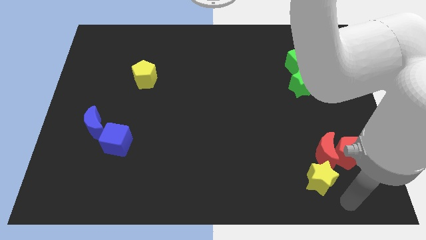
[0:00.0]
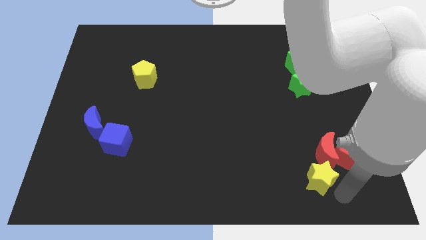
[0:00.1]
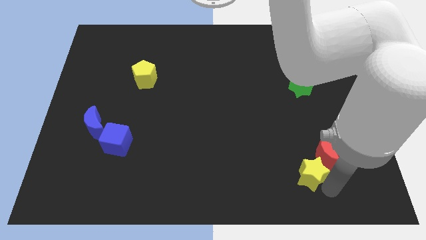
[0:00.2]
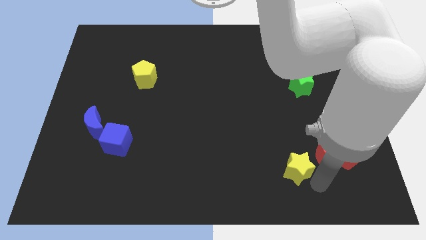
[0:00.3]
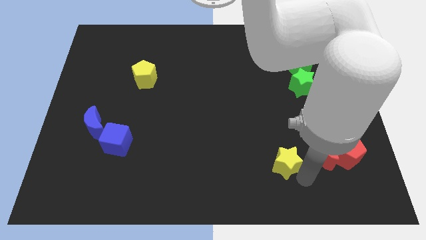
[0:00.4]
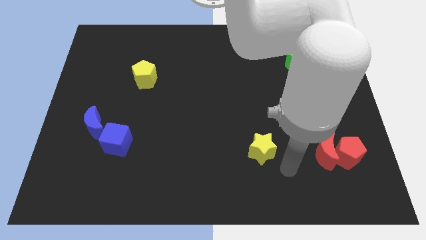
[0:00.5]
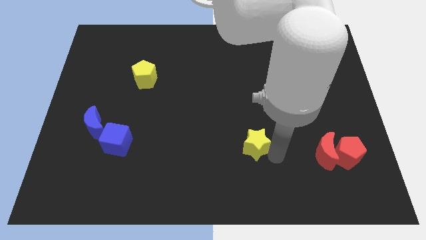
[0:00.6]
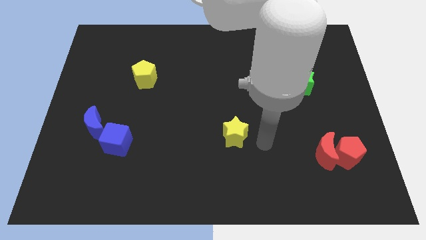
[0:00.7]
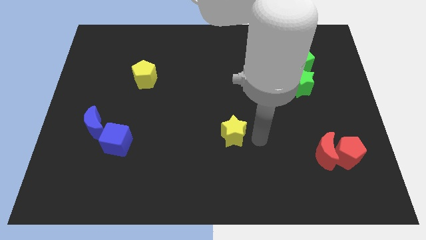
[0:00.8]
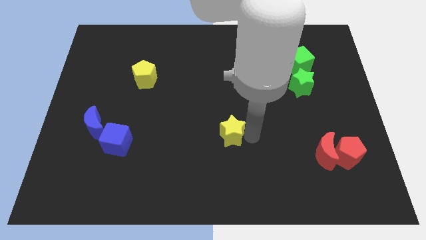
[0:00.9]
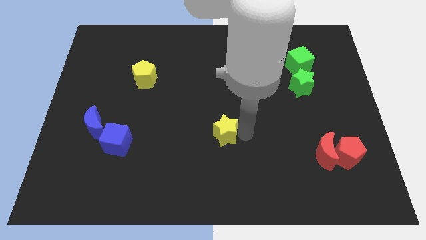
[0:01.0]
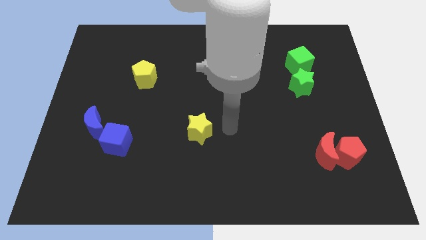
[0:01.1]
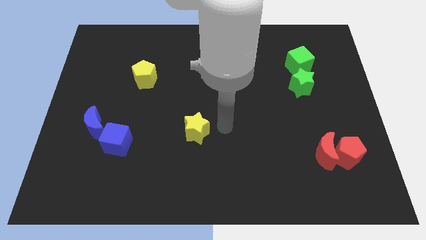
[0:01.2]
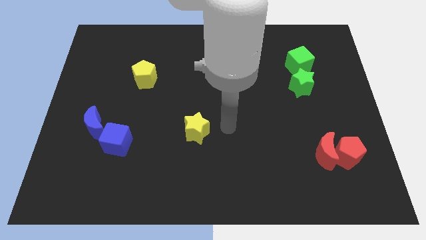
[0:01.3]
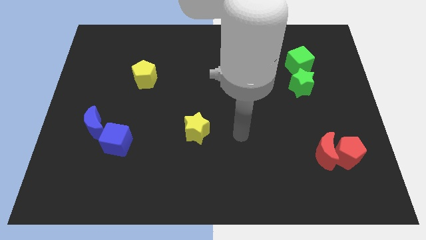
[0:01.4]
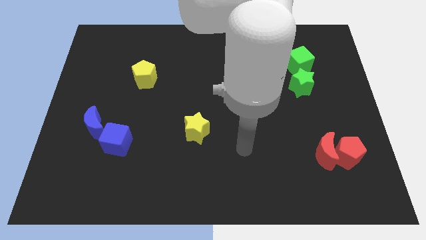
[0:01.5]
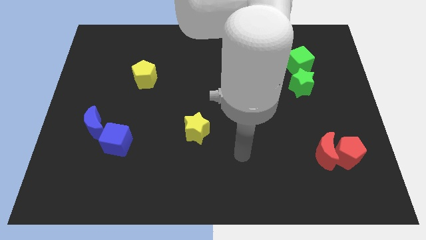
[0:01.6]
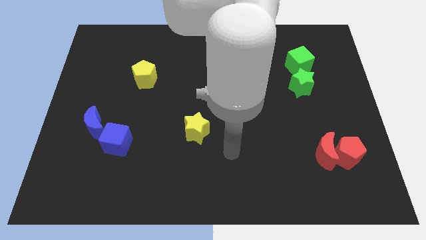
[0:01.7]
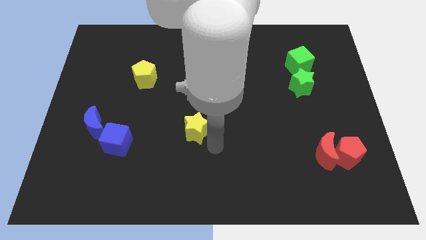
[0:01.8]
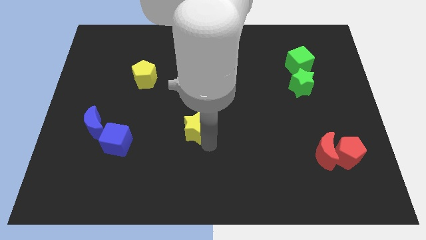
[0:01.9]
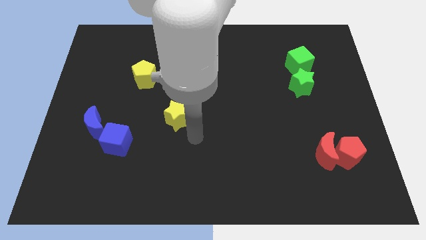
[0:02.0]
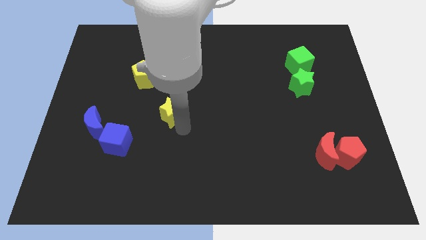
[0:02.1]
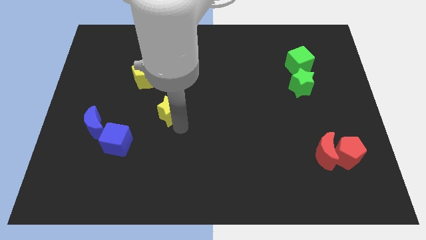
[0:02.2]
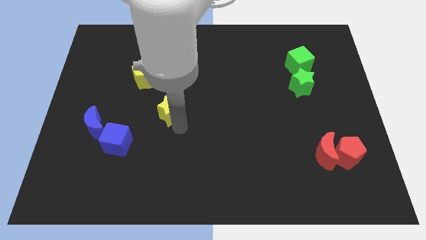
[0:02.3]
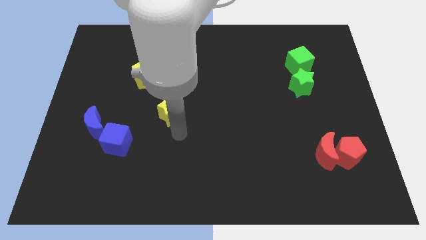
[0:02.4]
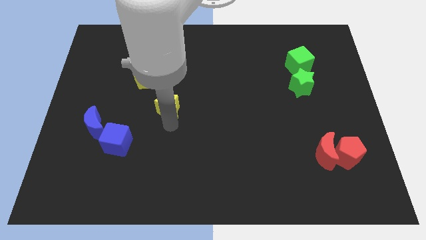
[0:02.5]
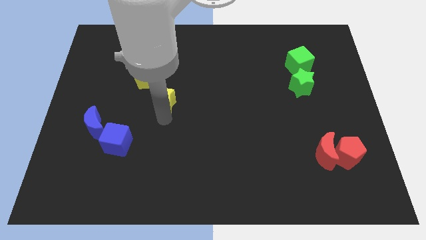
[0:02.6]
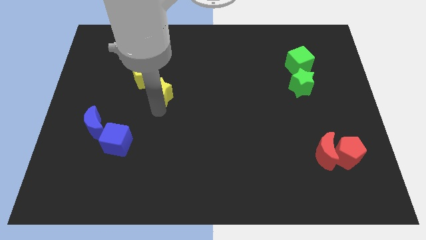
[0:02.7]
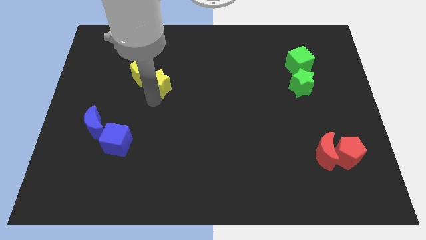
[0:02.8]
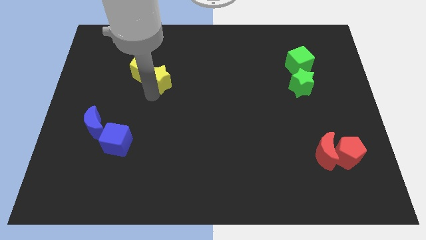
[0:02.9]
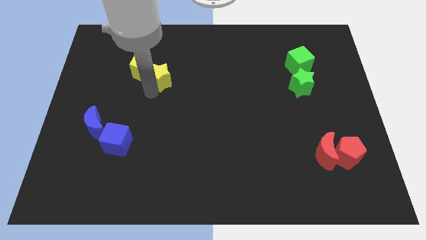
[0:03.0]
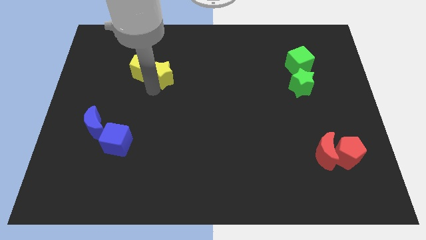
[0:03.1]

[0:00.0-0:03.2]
move yellow star into the yellow pentagon

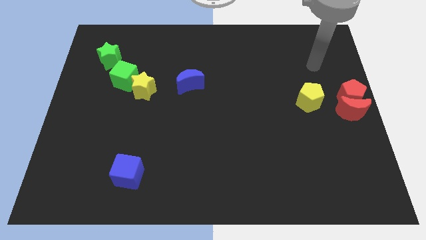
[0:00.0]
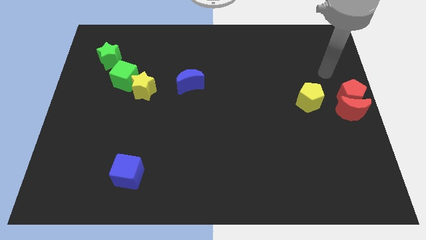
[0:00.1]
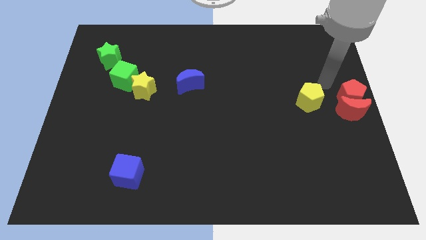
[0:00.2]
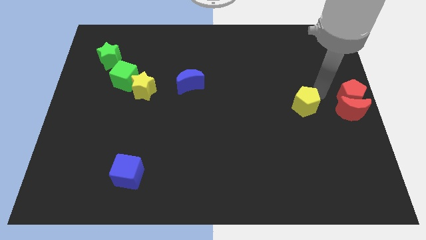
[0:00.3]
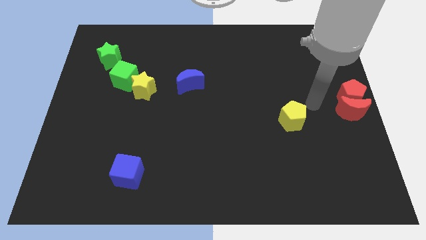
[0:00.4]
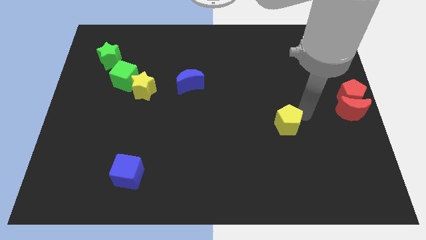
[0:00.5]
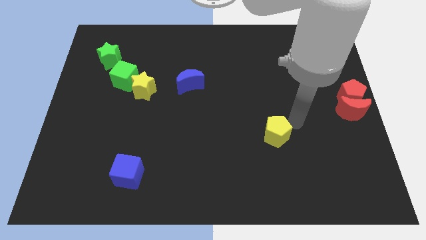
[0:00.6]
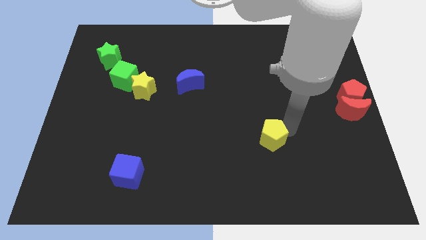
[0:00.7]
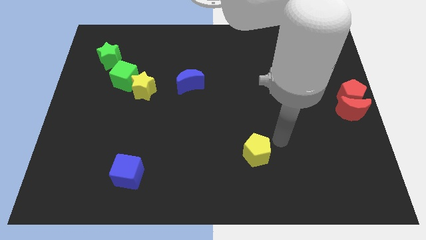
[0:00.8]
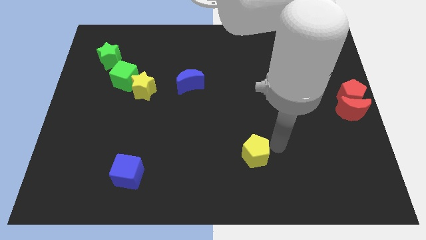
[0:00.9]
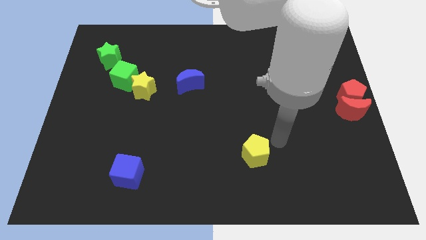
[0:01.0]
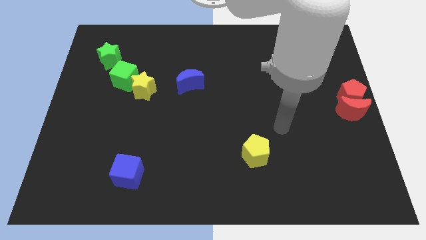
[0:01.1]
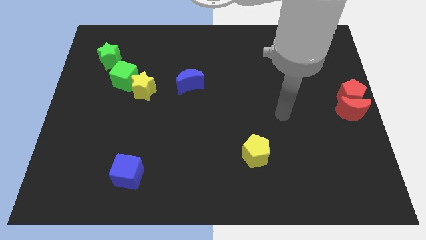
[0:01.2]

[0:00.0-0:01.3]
move the yellow pentagon towards the bottom center of the board

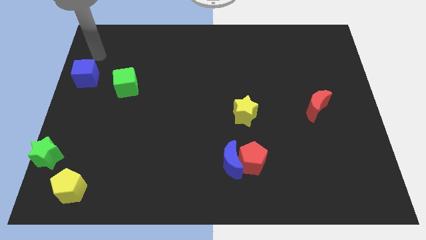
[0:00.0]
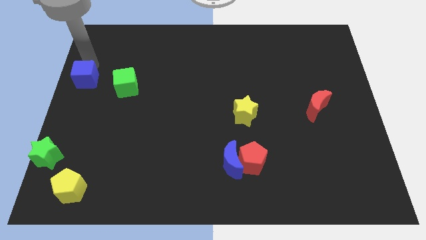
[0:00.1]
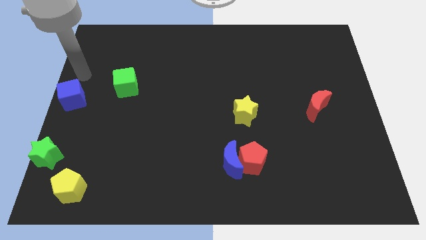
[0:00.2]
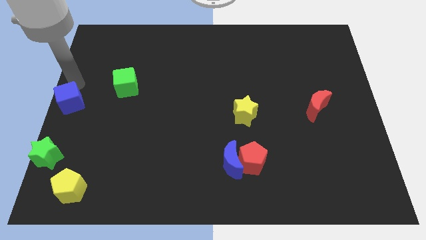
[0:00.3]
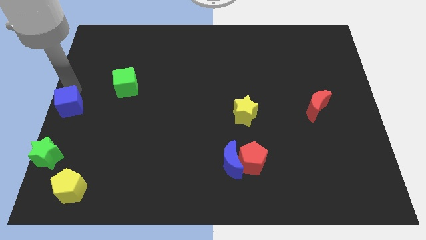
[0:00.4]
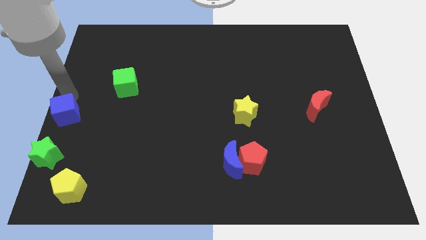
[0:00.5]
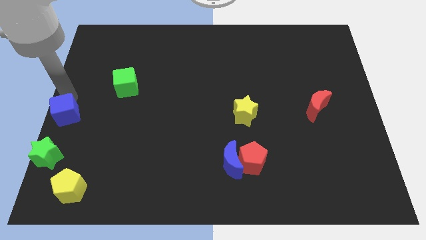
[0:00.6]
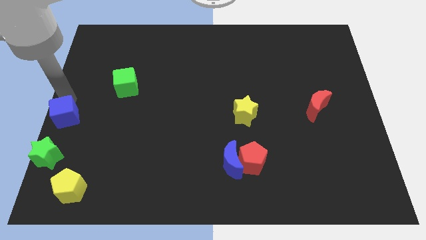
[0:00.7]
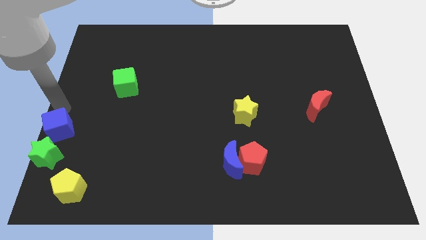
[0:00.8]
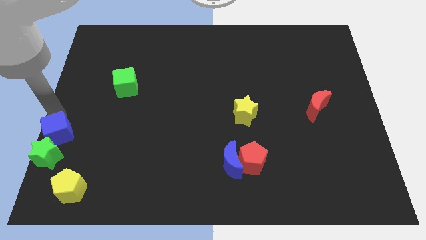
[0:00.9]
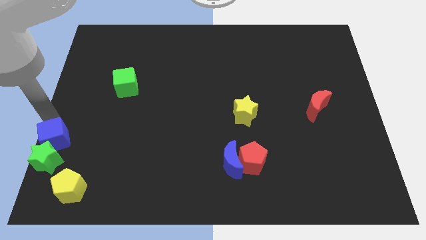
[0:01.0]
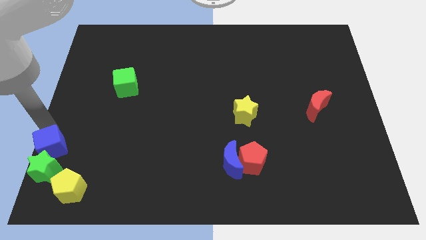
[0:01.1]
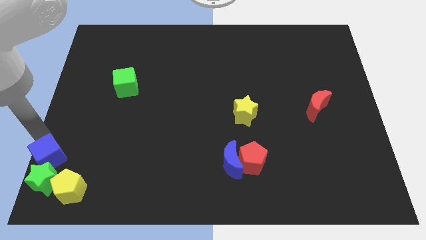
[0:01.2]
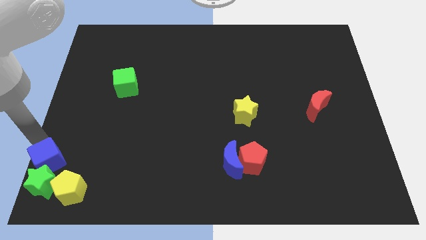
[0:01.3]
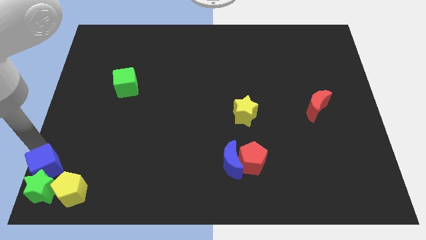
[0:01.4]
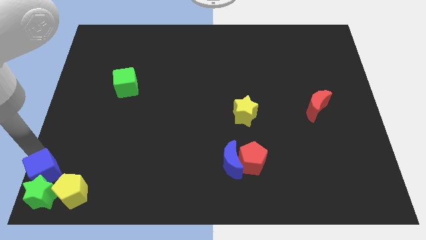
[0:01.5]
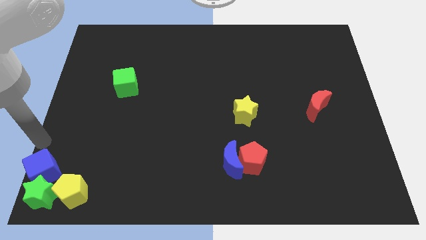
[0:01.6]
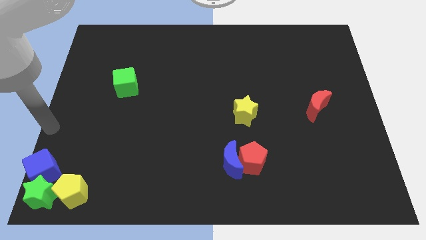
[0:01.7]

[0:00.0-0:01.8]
push the green star towards the left side of the yellow pentagon with the help of the blue cube

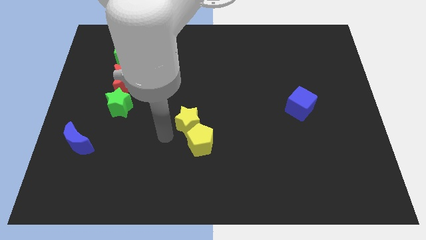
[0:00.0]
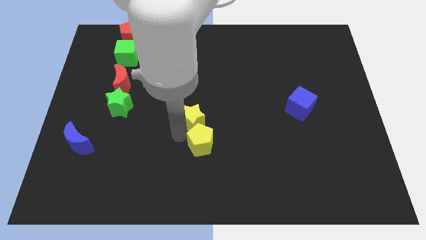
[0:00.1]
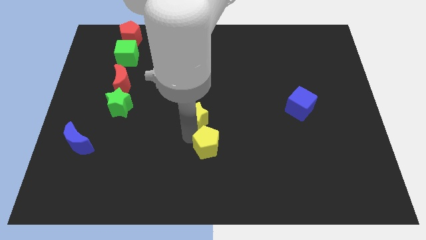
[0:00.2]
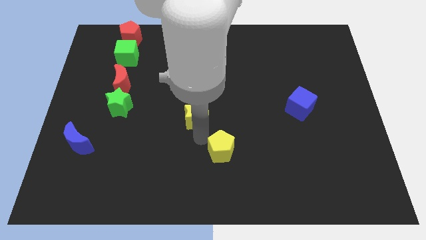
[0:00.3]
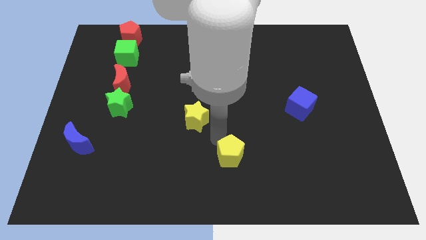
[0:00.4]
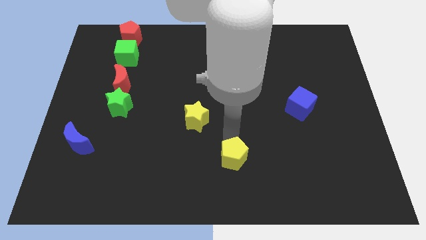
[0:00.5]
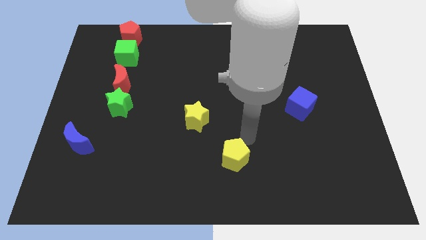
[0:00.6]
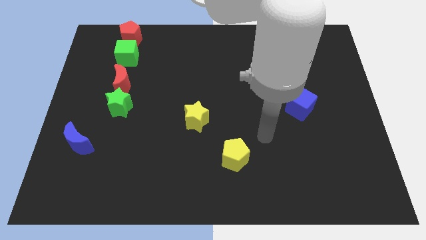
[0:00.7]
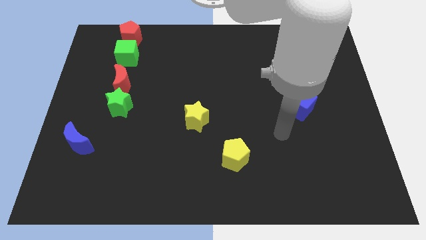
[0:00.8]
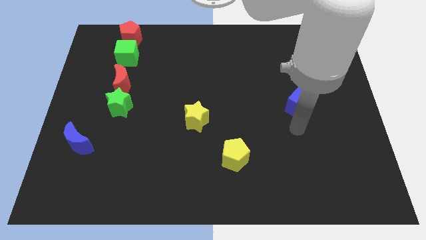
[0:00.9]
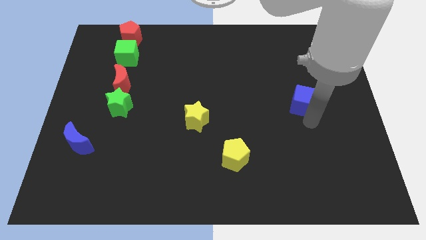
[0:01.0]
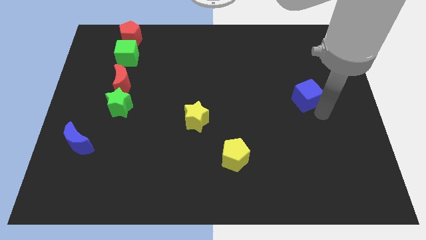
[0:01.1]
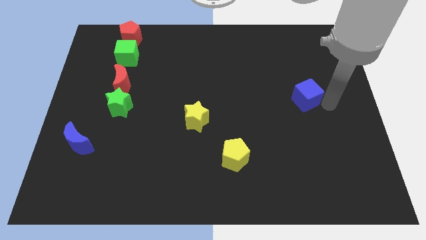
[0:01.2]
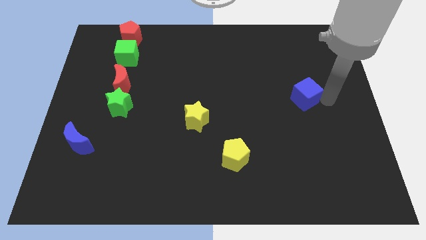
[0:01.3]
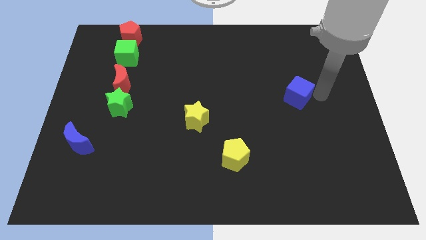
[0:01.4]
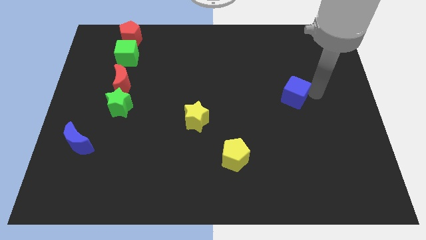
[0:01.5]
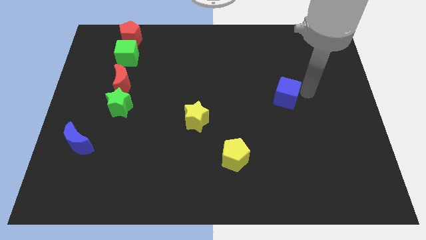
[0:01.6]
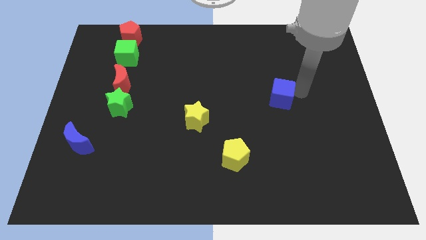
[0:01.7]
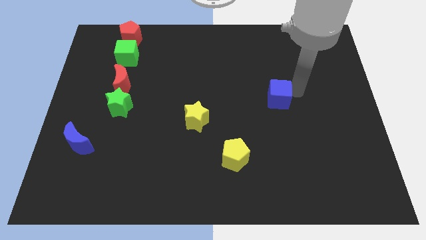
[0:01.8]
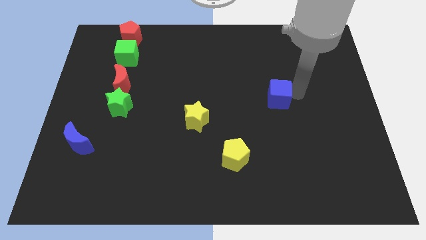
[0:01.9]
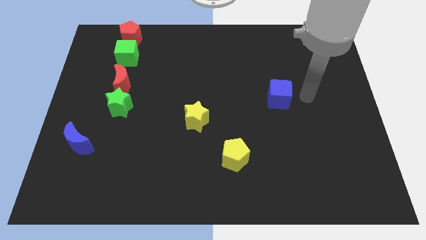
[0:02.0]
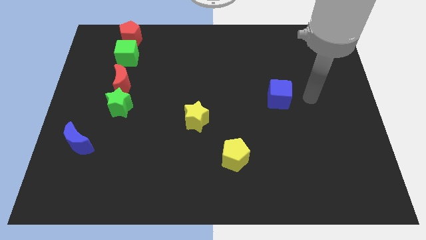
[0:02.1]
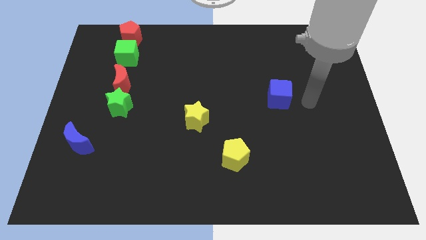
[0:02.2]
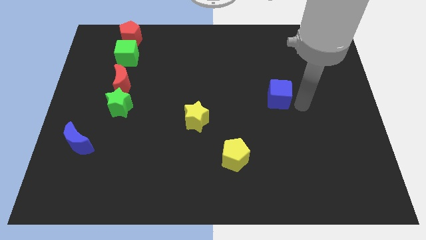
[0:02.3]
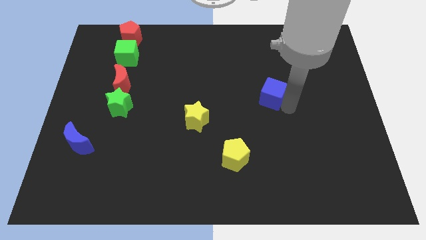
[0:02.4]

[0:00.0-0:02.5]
move yellow pentagon away for the yellow star

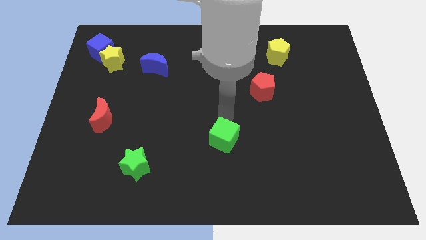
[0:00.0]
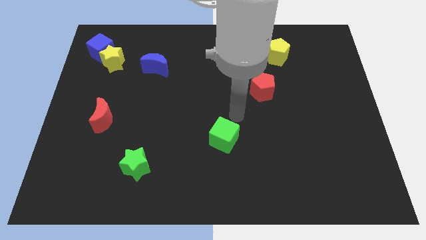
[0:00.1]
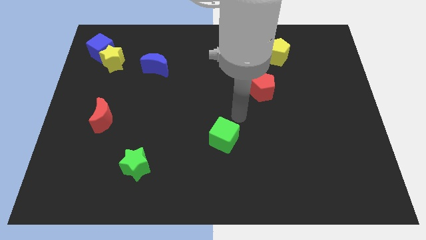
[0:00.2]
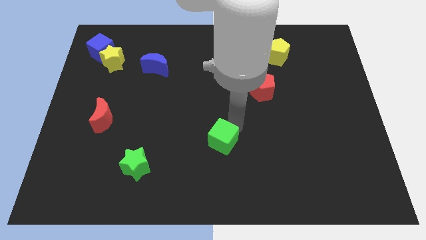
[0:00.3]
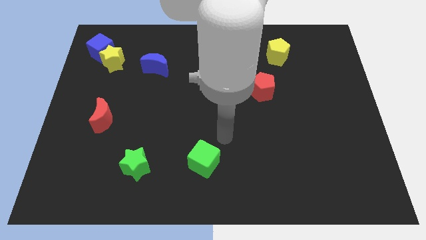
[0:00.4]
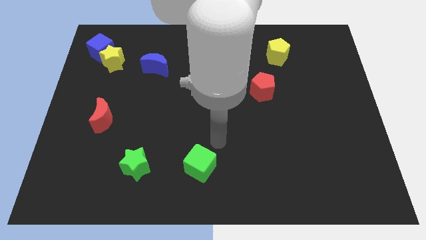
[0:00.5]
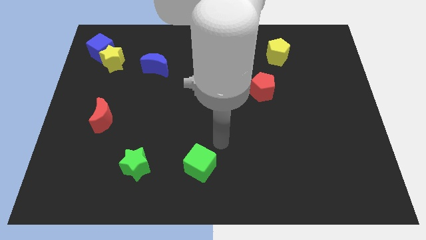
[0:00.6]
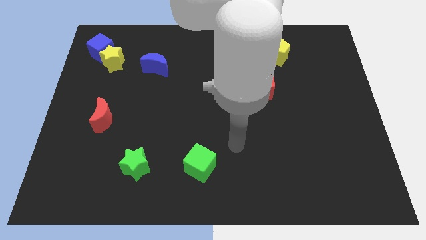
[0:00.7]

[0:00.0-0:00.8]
place green cube to the right of green star
